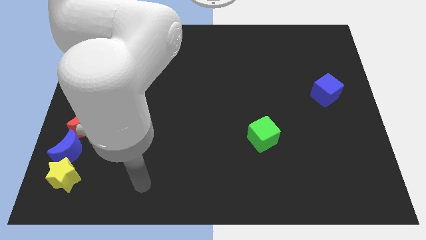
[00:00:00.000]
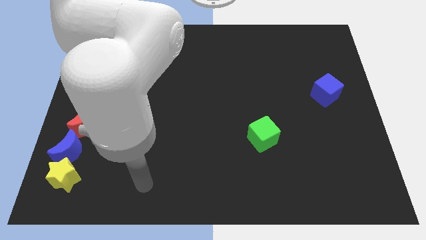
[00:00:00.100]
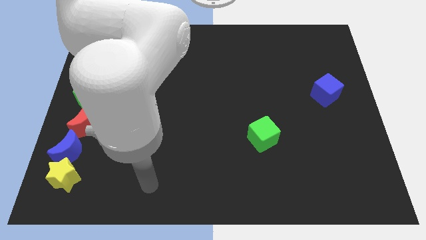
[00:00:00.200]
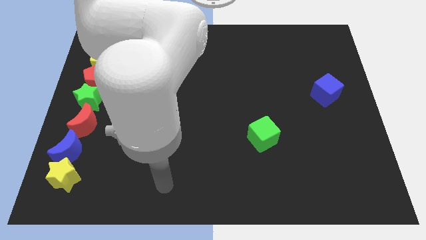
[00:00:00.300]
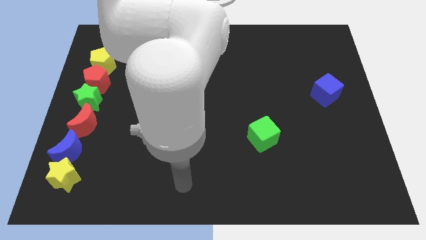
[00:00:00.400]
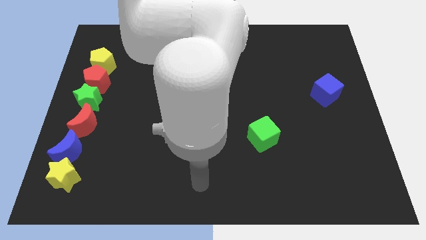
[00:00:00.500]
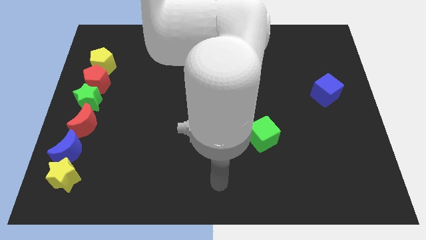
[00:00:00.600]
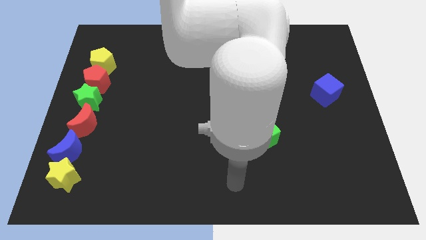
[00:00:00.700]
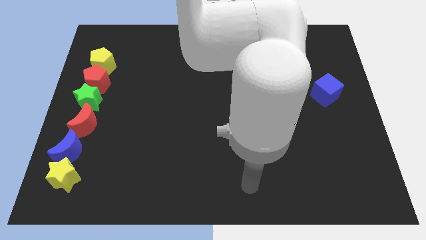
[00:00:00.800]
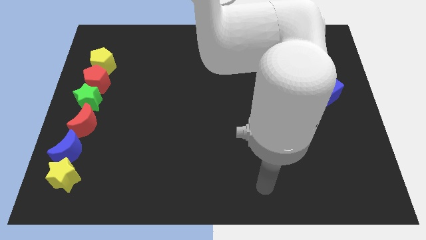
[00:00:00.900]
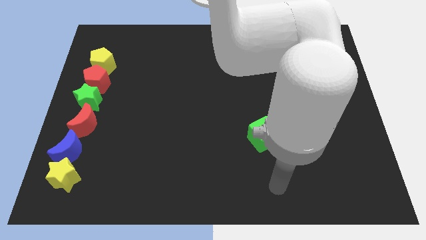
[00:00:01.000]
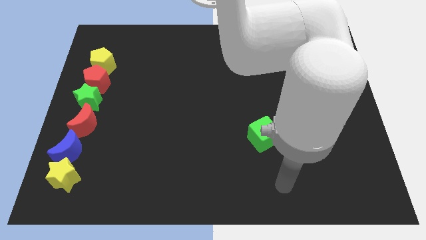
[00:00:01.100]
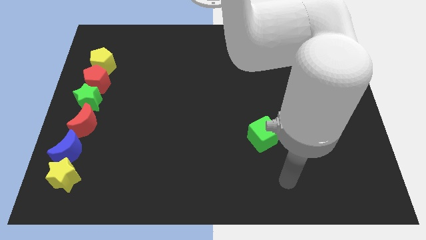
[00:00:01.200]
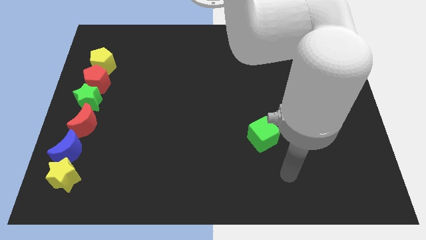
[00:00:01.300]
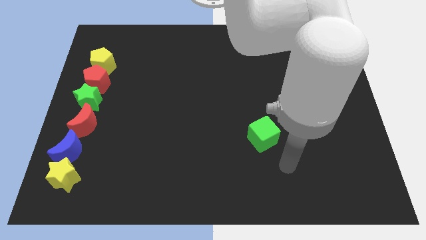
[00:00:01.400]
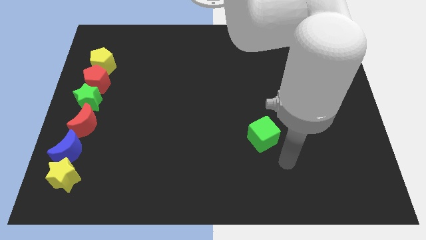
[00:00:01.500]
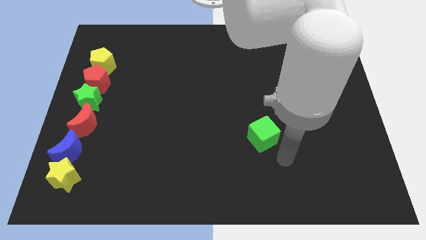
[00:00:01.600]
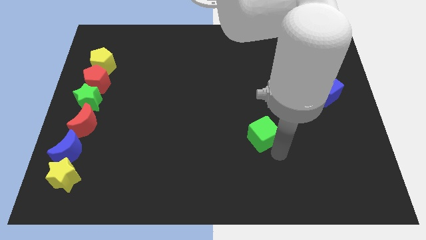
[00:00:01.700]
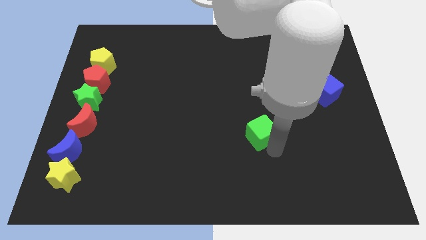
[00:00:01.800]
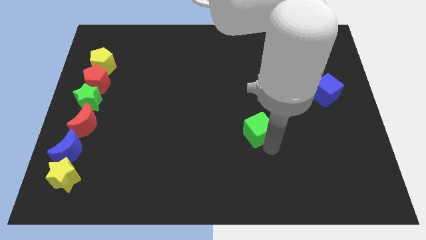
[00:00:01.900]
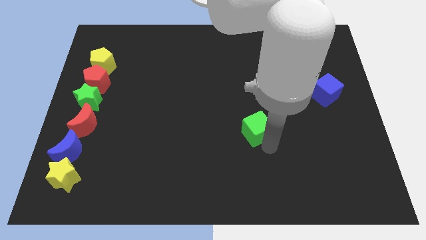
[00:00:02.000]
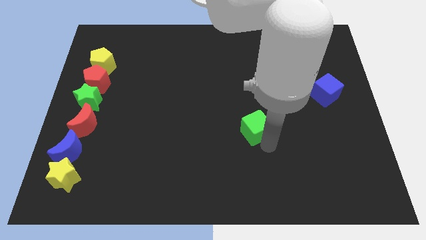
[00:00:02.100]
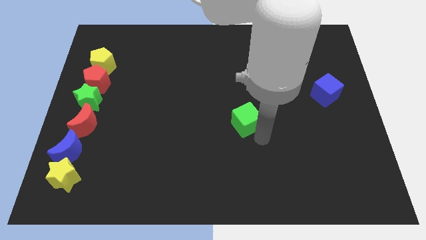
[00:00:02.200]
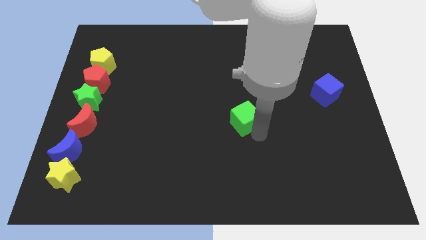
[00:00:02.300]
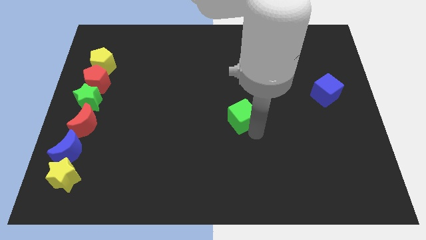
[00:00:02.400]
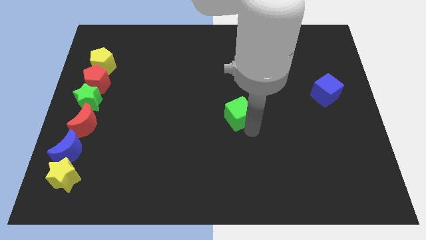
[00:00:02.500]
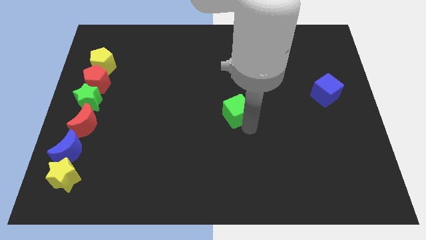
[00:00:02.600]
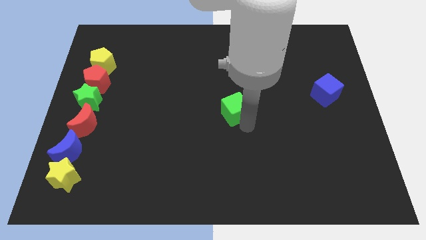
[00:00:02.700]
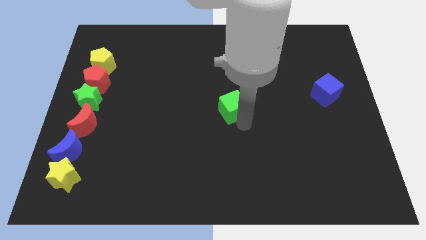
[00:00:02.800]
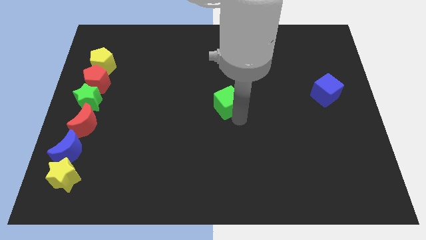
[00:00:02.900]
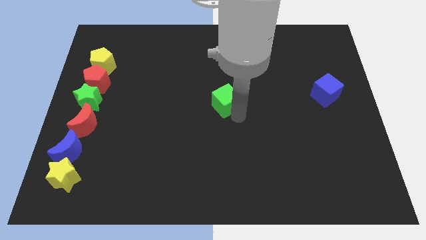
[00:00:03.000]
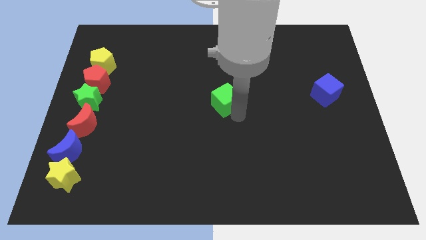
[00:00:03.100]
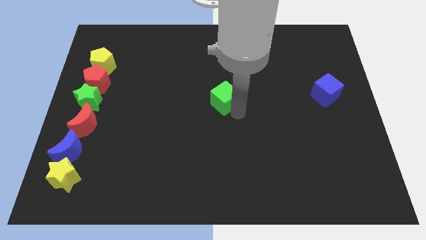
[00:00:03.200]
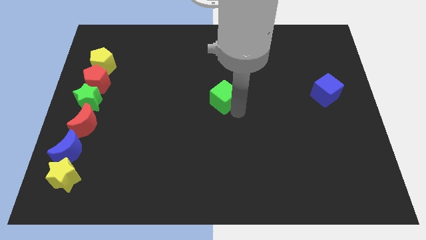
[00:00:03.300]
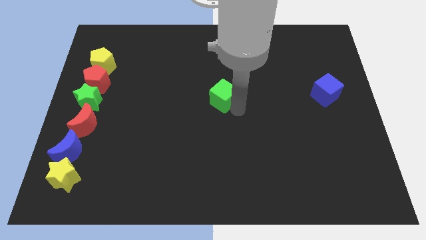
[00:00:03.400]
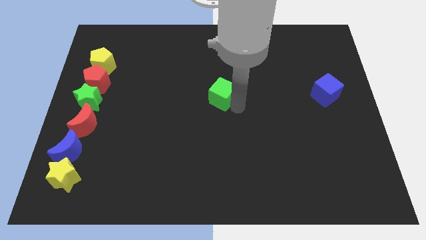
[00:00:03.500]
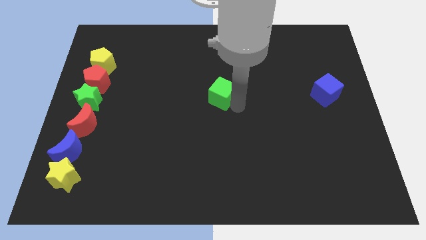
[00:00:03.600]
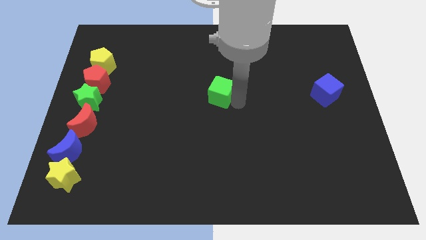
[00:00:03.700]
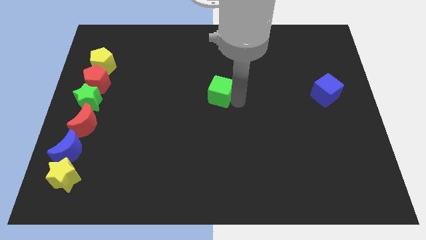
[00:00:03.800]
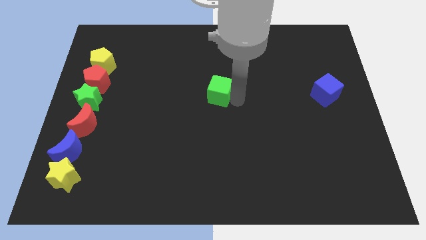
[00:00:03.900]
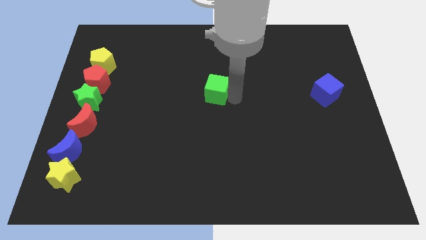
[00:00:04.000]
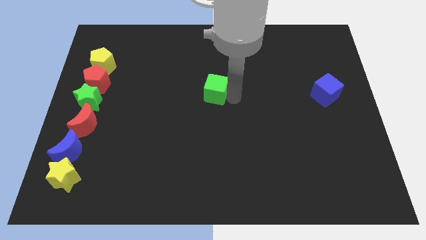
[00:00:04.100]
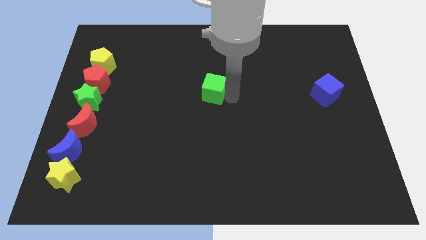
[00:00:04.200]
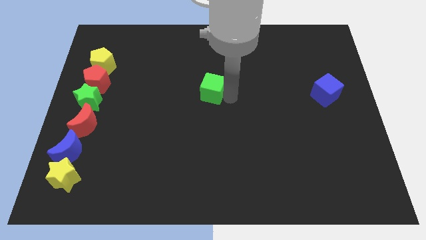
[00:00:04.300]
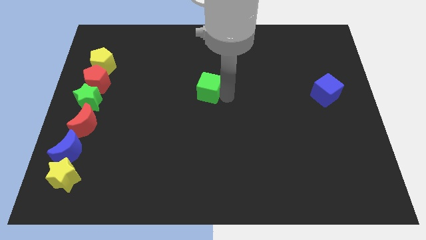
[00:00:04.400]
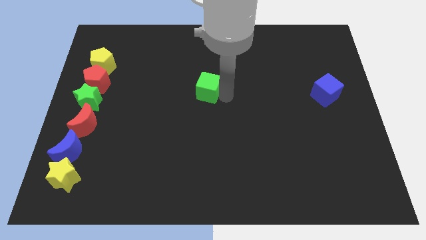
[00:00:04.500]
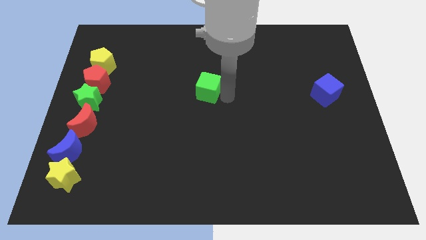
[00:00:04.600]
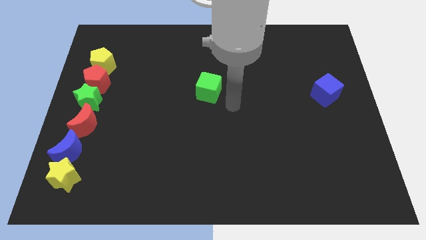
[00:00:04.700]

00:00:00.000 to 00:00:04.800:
place green cube to the right of the red pentagon

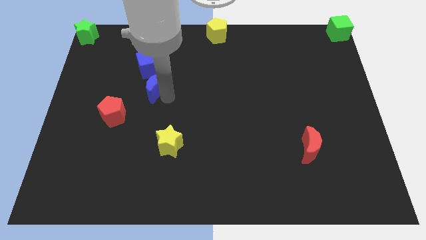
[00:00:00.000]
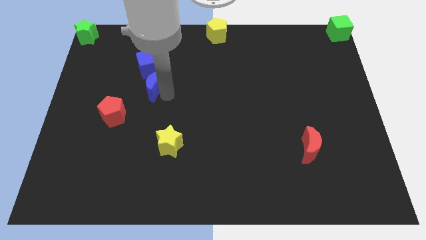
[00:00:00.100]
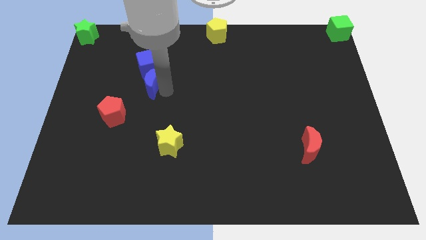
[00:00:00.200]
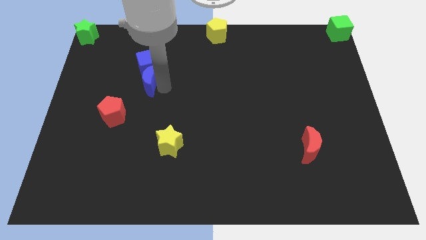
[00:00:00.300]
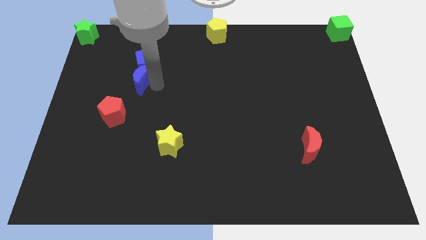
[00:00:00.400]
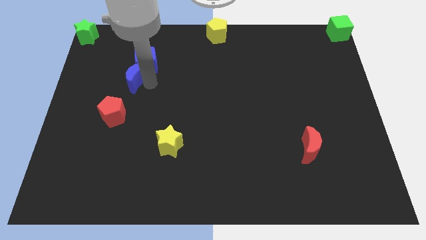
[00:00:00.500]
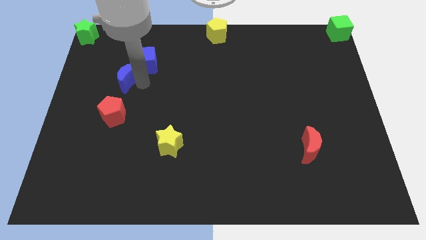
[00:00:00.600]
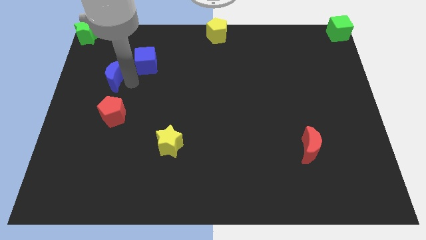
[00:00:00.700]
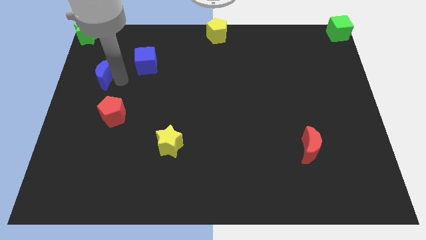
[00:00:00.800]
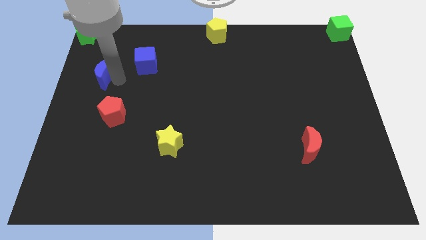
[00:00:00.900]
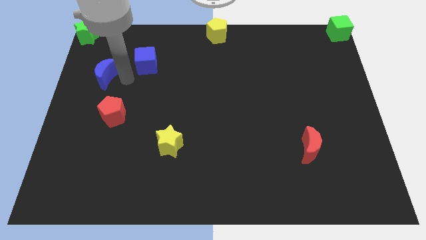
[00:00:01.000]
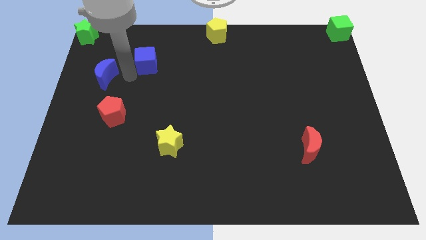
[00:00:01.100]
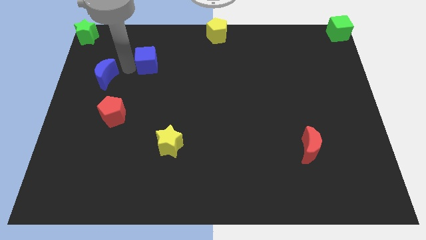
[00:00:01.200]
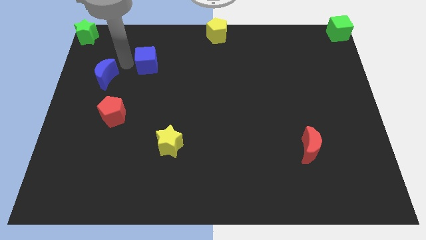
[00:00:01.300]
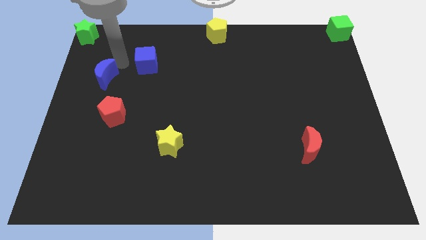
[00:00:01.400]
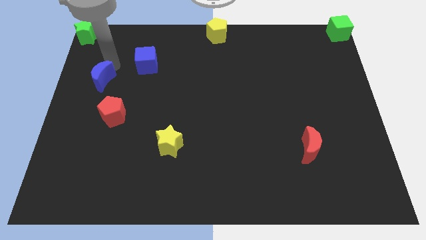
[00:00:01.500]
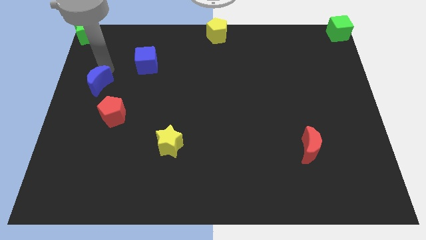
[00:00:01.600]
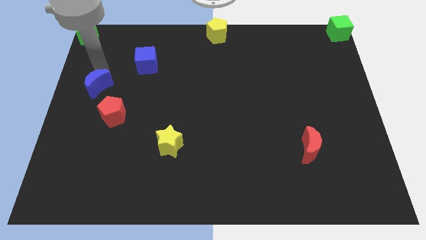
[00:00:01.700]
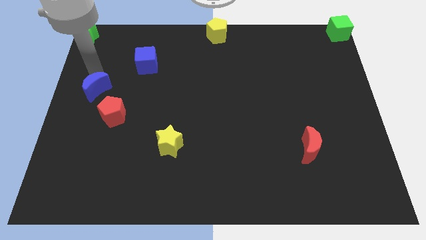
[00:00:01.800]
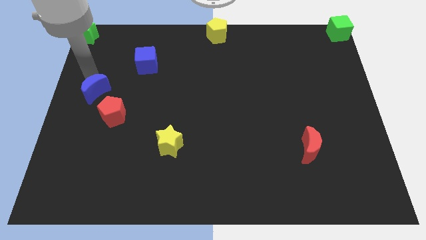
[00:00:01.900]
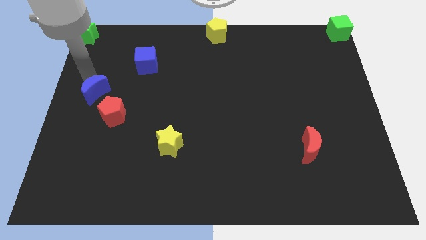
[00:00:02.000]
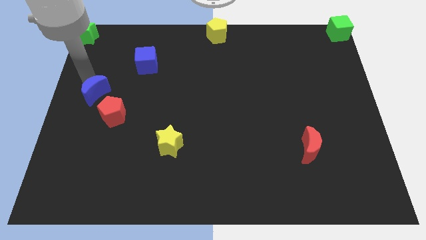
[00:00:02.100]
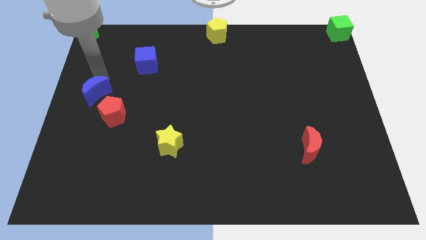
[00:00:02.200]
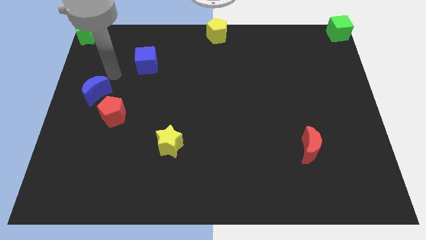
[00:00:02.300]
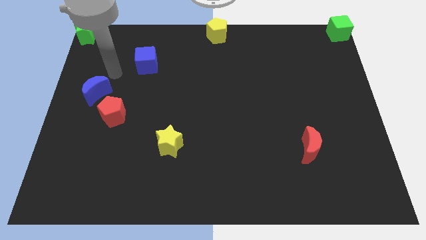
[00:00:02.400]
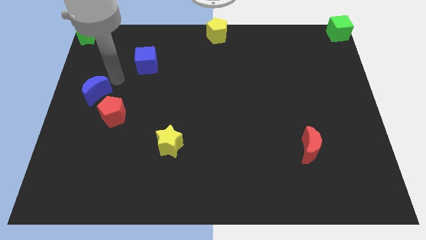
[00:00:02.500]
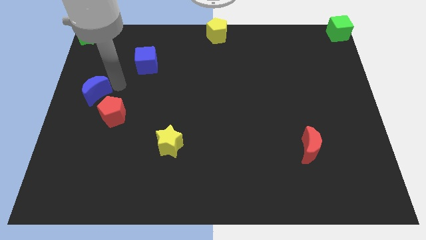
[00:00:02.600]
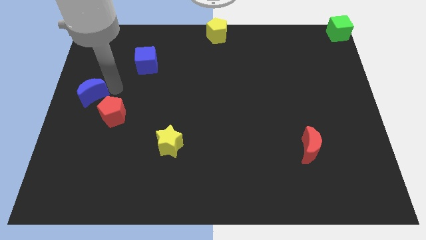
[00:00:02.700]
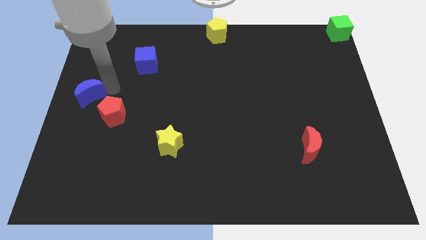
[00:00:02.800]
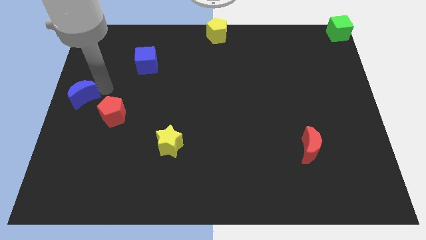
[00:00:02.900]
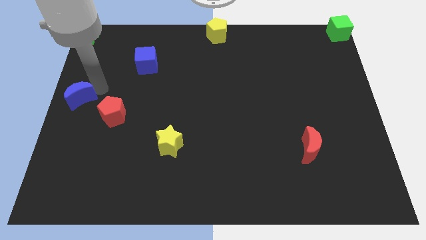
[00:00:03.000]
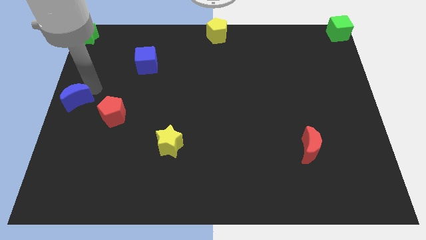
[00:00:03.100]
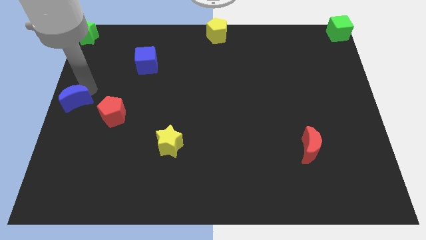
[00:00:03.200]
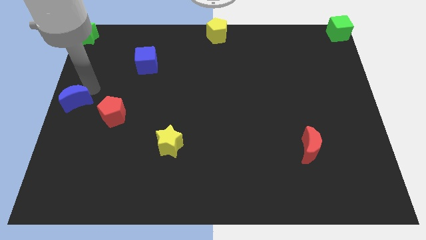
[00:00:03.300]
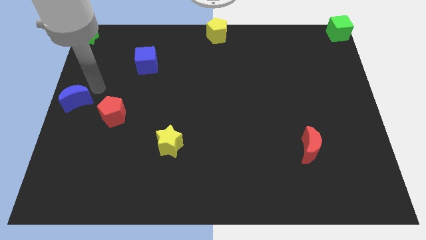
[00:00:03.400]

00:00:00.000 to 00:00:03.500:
place the blue crescent at the center left of the board

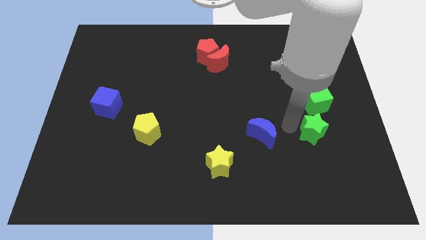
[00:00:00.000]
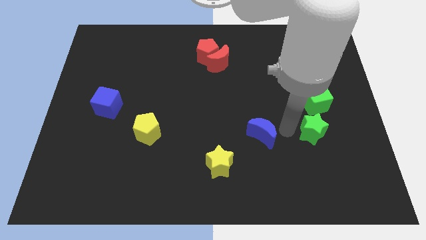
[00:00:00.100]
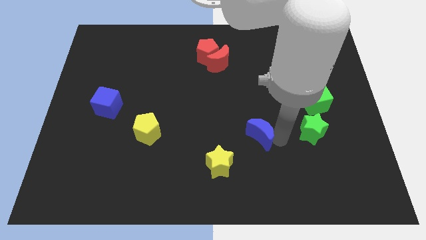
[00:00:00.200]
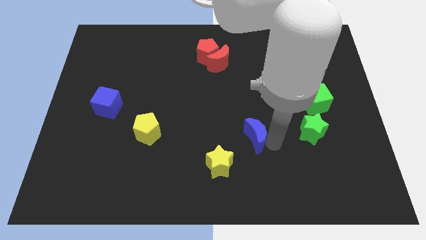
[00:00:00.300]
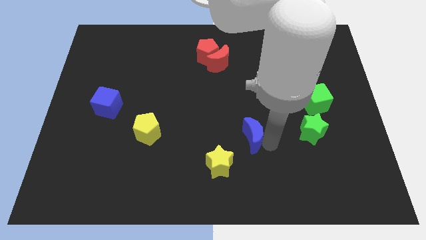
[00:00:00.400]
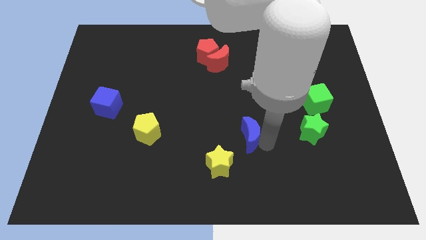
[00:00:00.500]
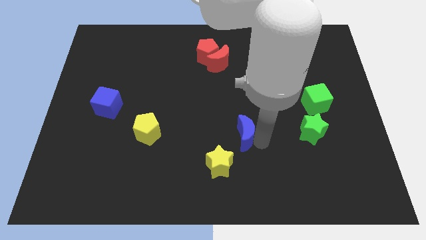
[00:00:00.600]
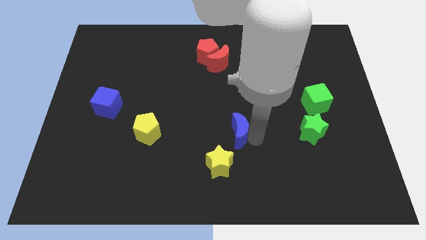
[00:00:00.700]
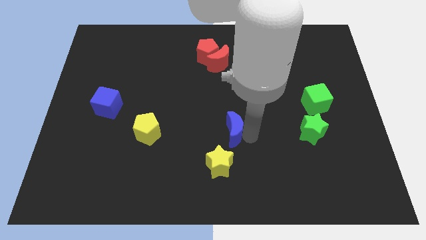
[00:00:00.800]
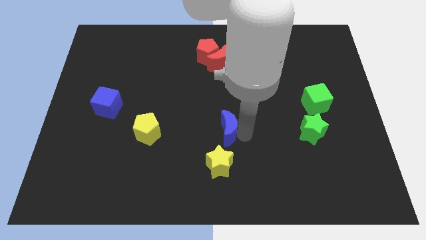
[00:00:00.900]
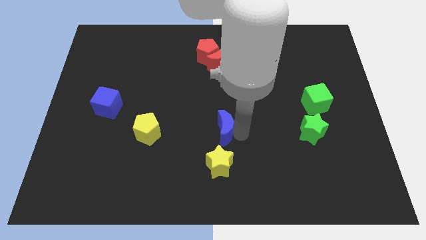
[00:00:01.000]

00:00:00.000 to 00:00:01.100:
place the blue crescent above the yellow star
